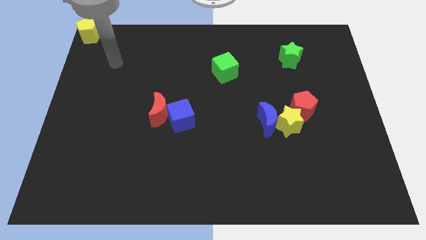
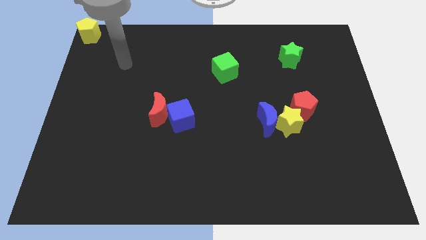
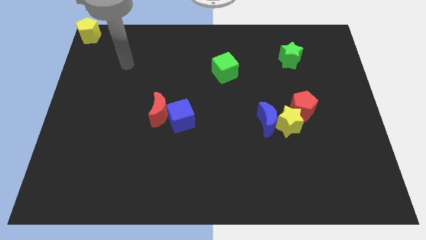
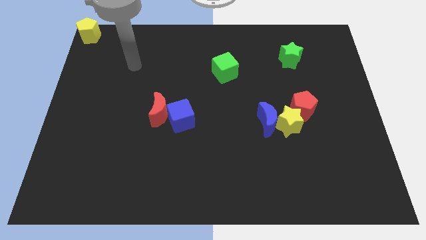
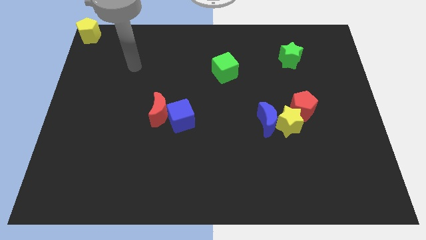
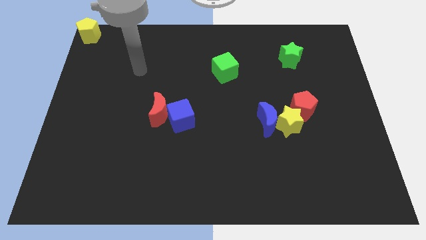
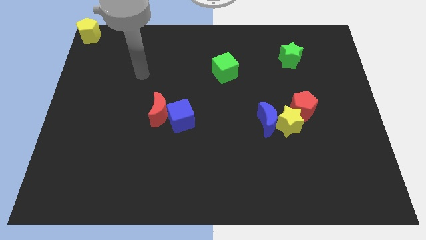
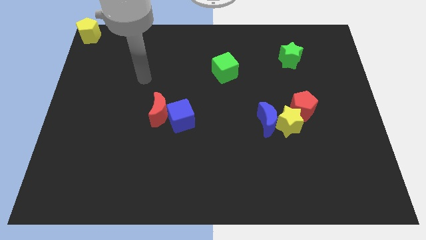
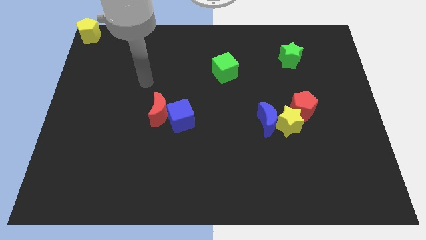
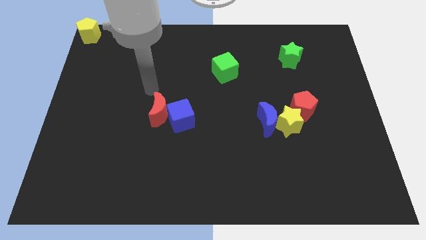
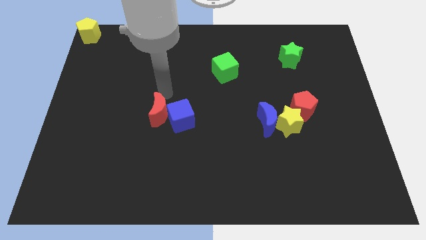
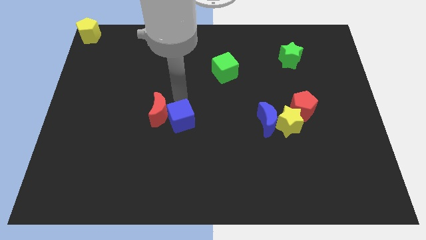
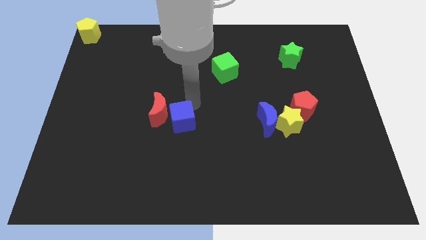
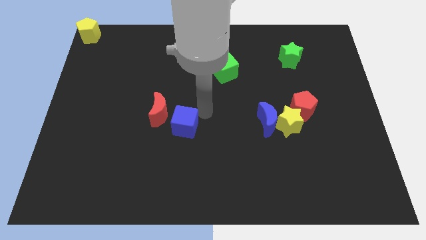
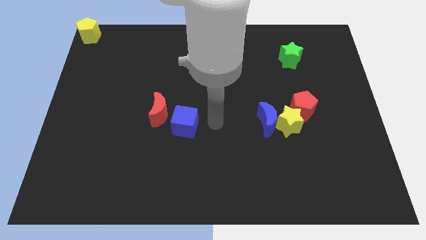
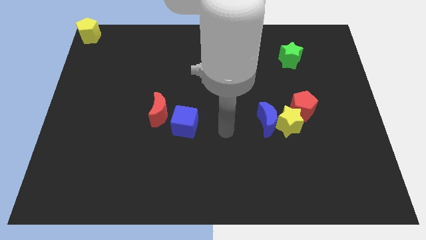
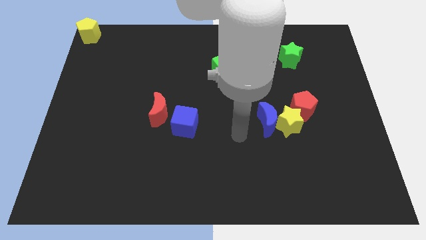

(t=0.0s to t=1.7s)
slightly push the blue cube towards the bottom of the board

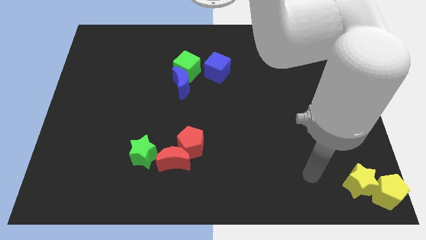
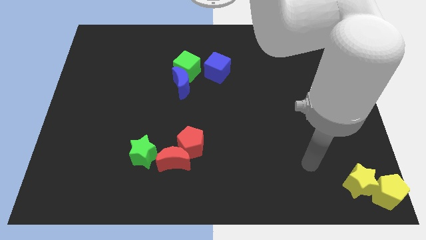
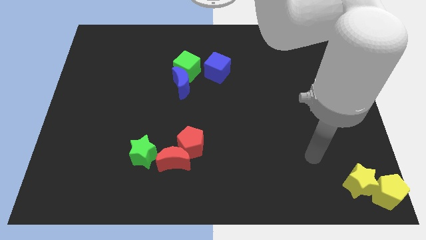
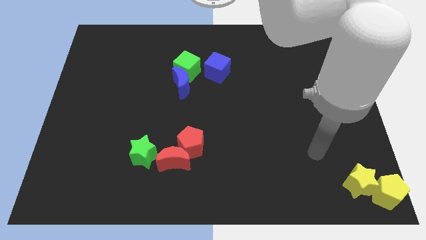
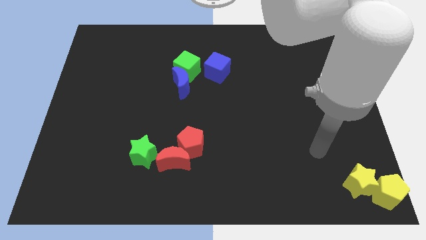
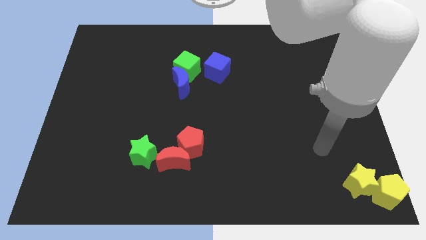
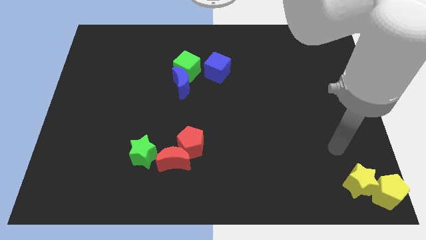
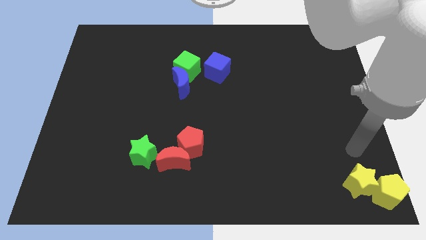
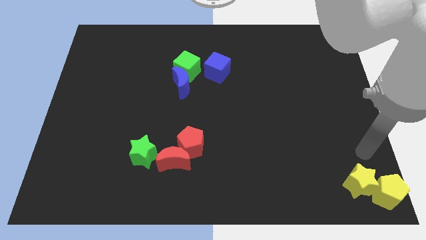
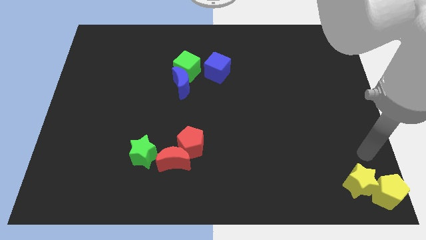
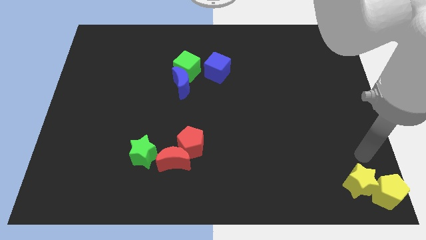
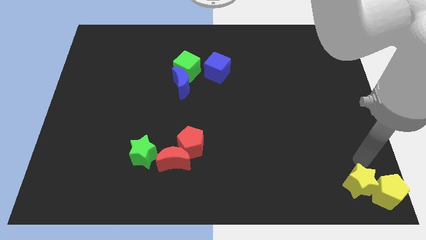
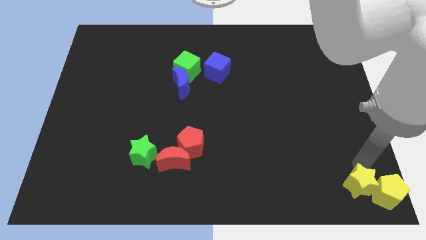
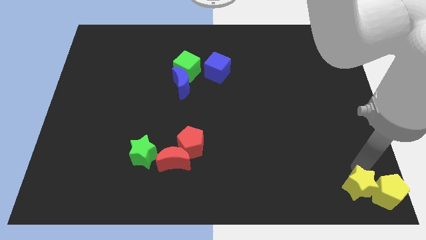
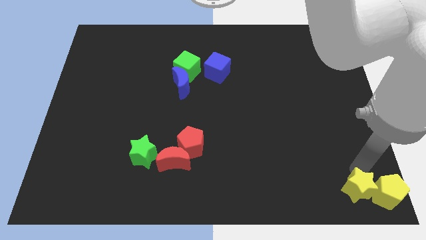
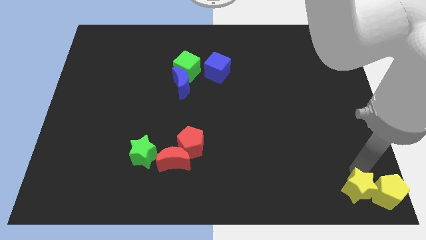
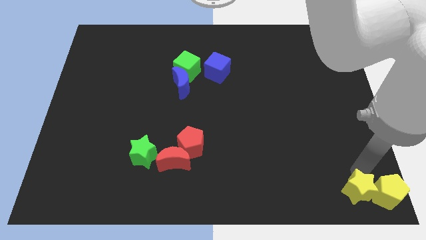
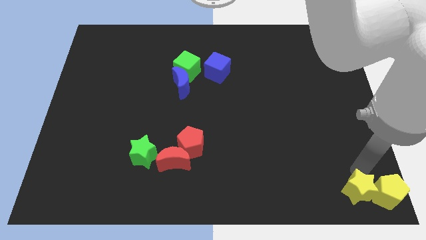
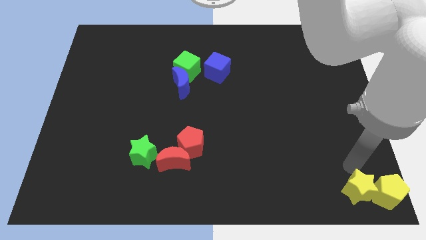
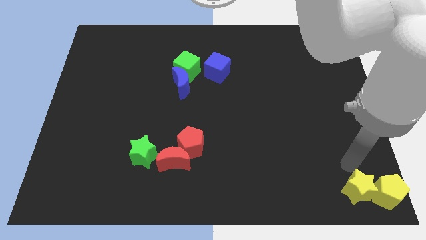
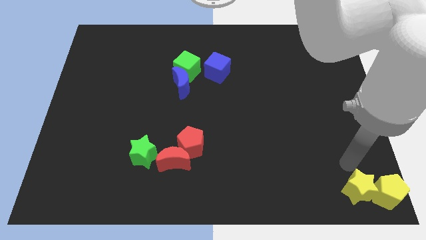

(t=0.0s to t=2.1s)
move the yellow star slightly to the bottom

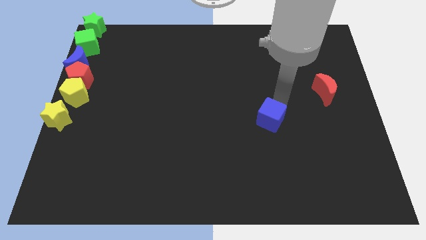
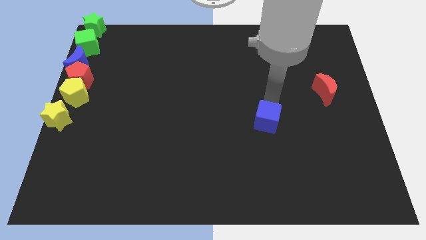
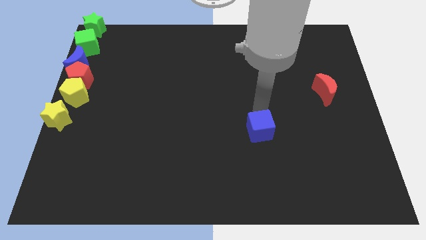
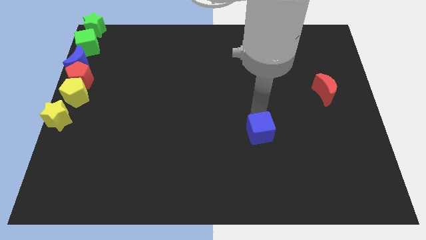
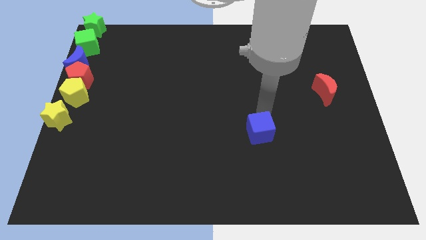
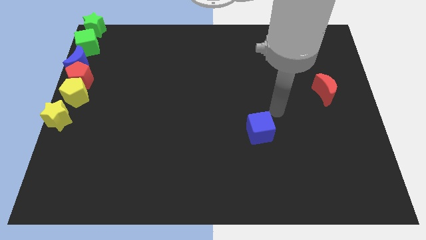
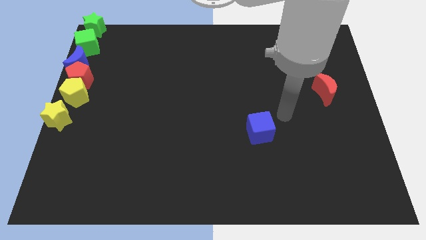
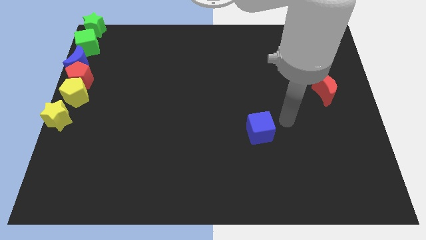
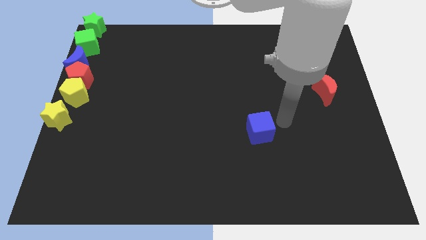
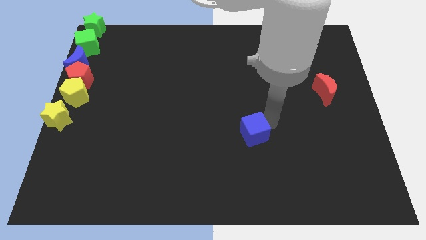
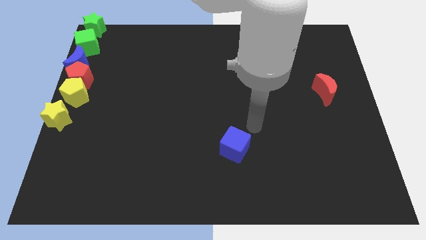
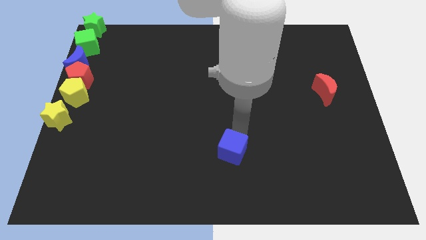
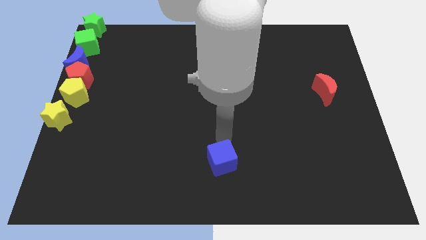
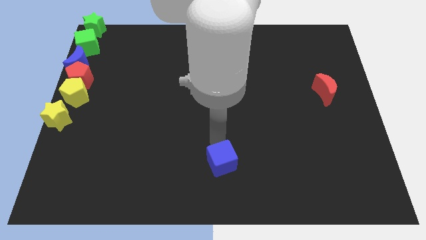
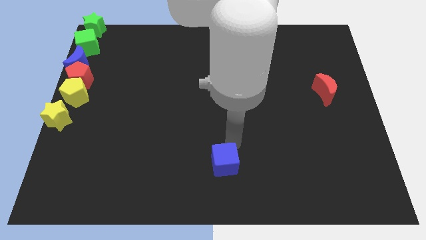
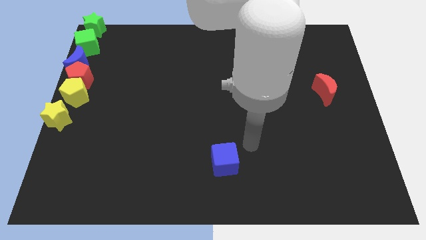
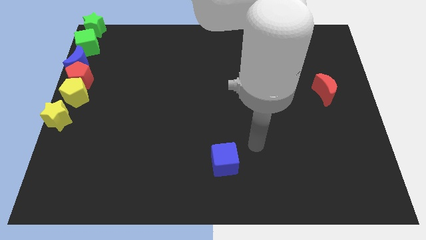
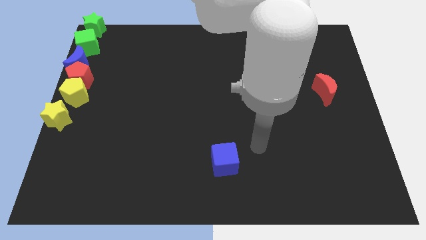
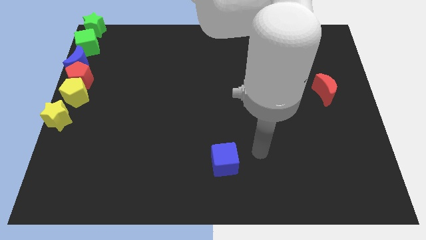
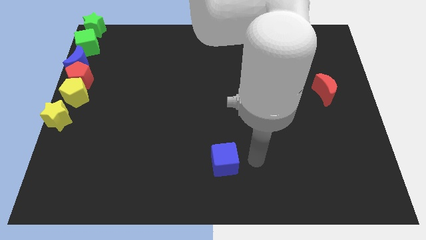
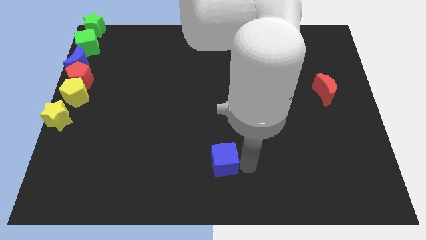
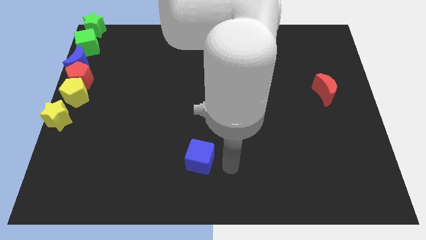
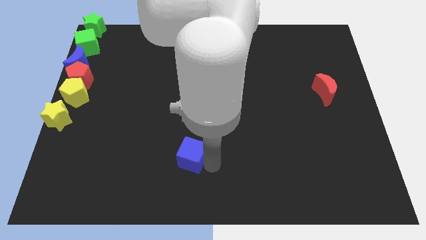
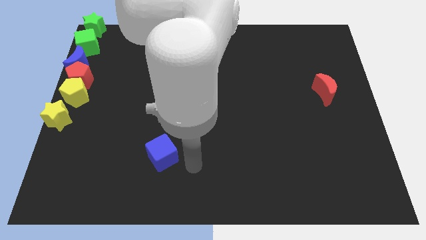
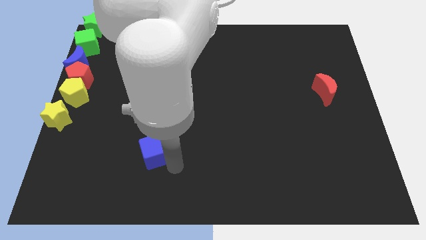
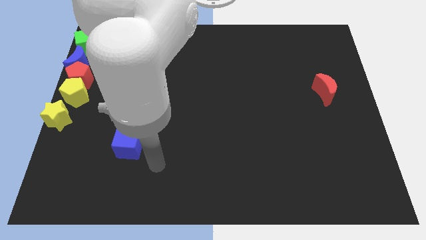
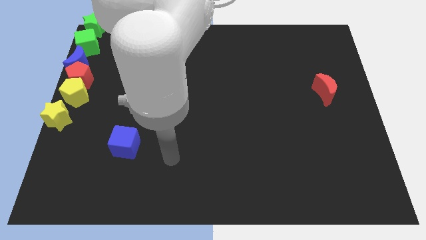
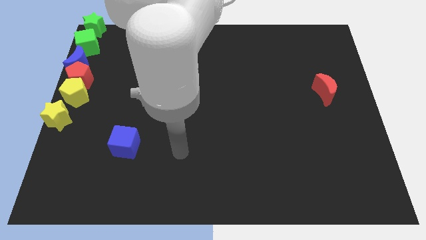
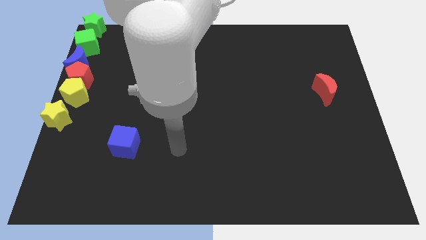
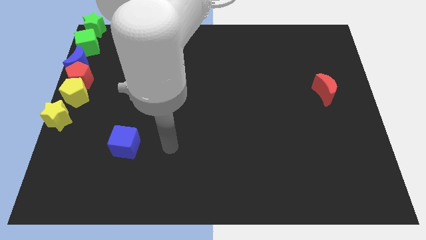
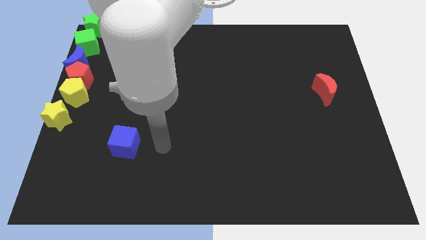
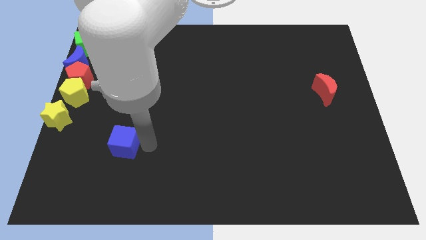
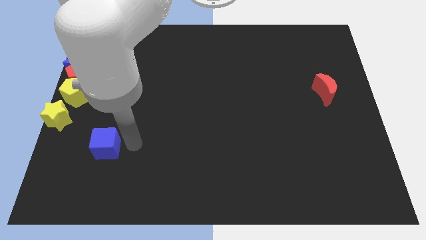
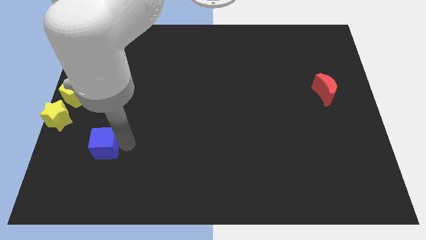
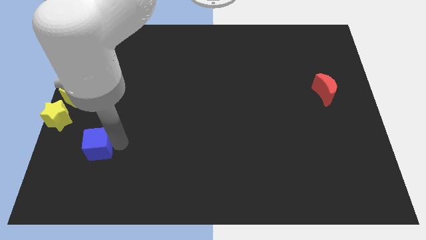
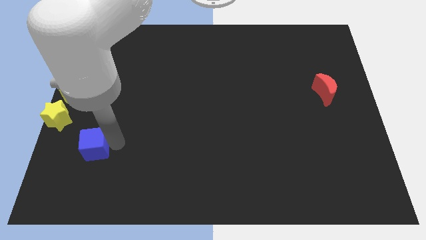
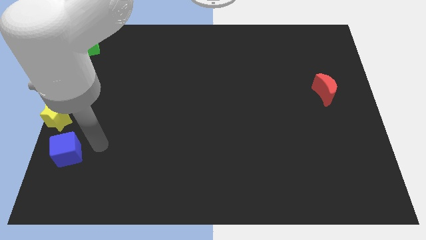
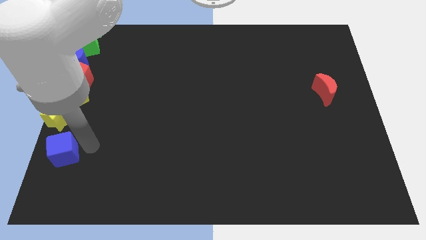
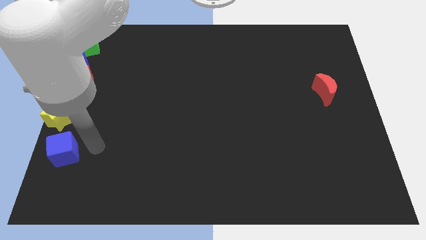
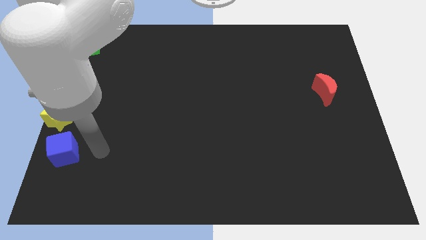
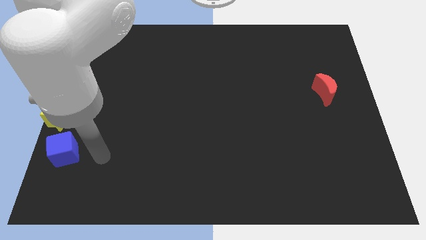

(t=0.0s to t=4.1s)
place the blue cube down to the yellow star

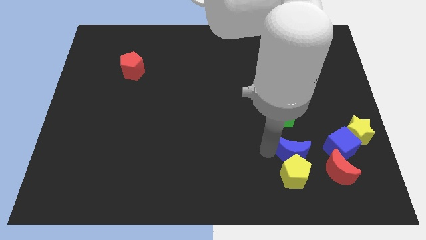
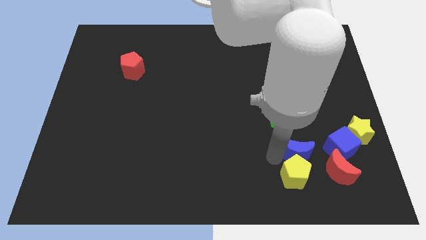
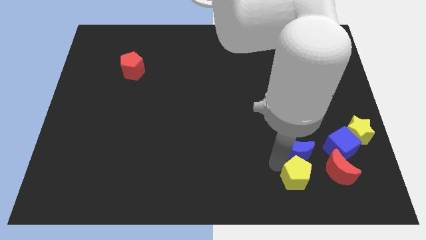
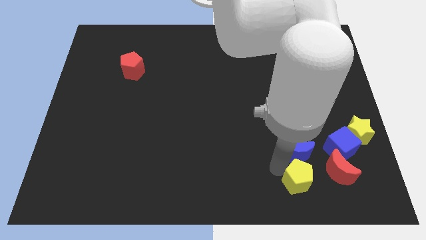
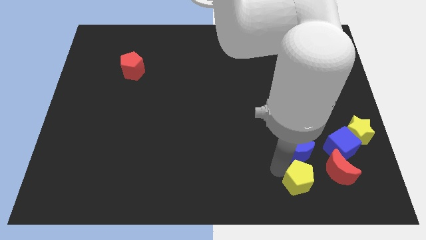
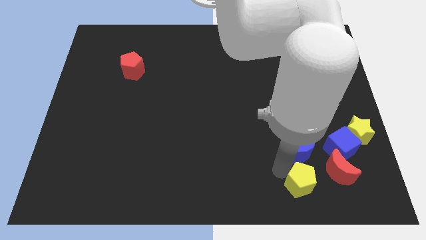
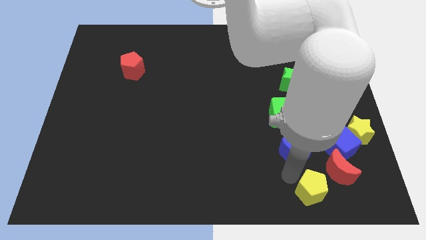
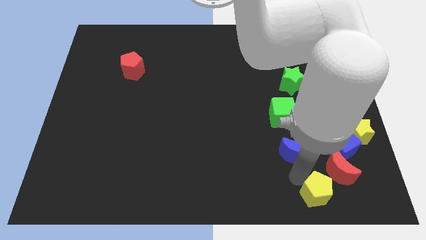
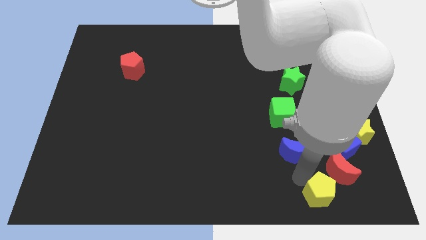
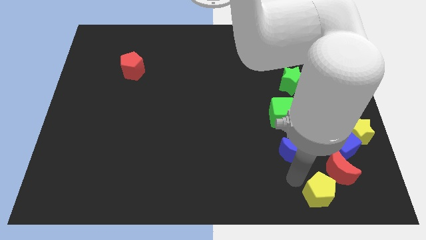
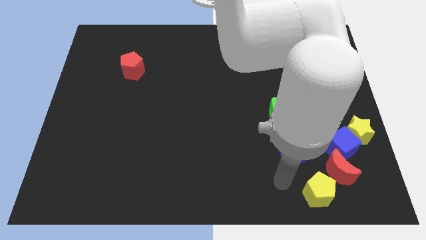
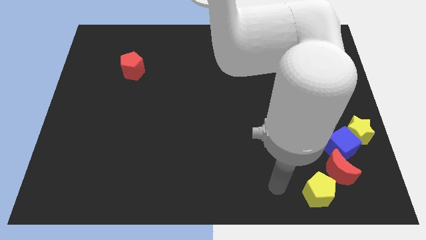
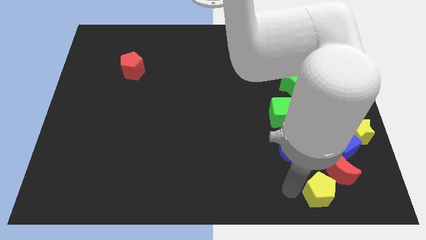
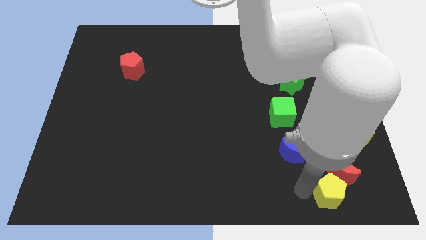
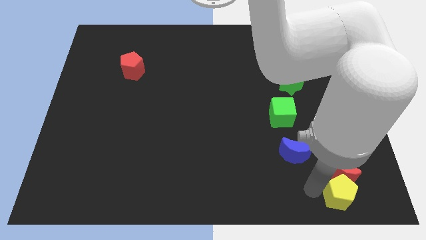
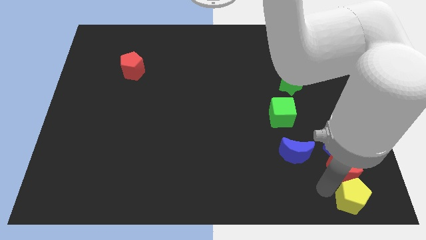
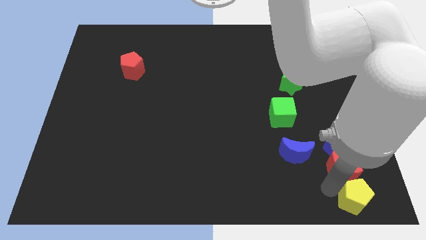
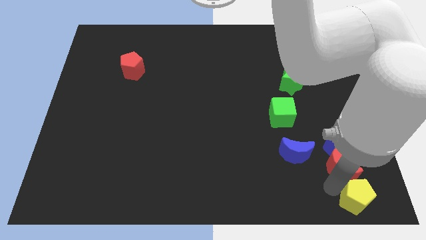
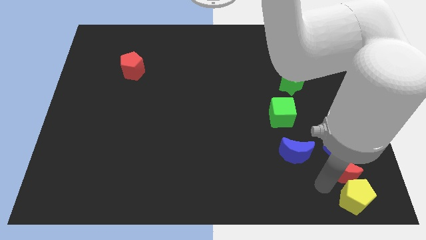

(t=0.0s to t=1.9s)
place the yellow pentagon below the red moon
